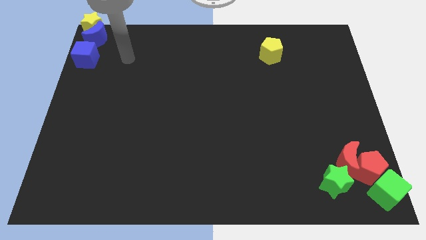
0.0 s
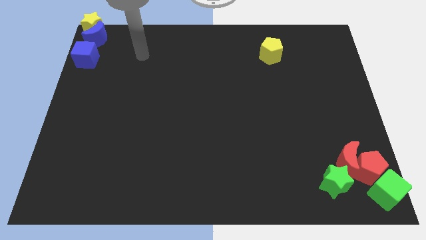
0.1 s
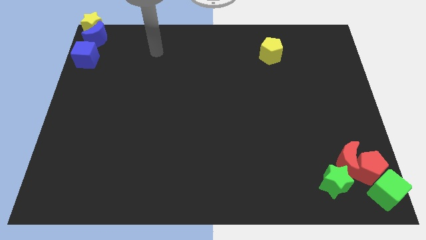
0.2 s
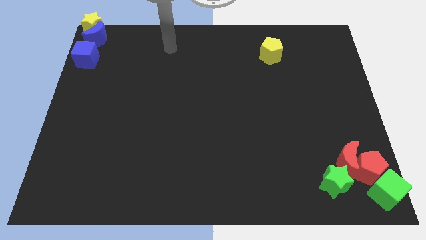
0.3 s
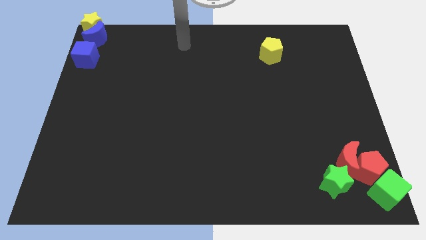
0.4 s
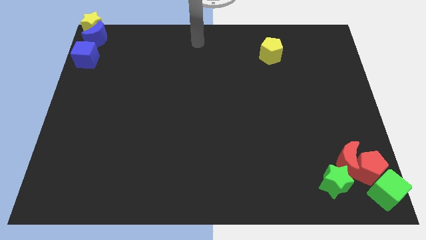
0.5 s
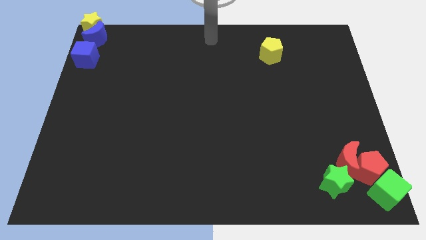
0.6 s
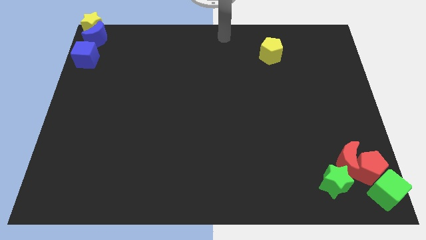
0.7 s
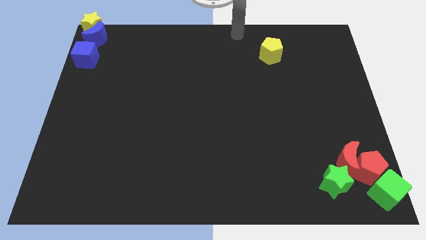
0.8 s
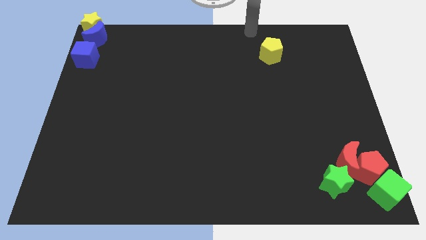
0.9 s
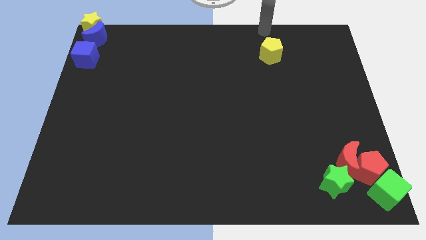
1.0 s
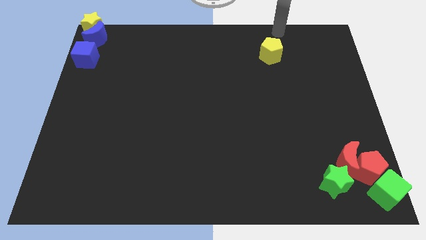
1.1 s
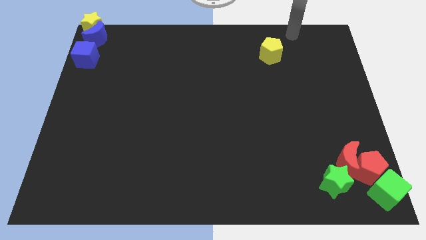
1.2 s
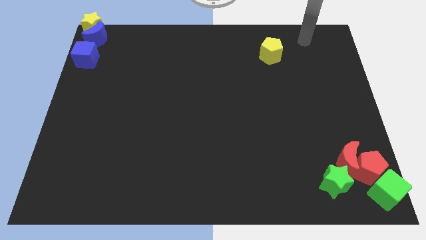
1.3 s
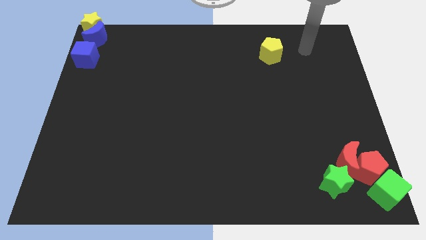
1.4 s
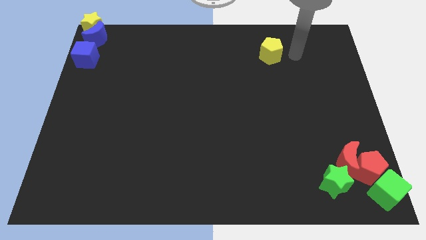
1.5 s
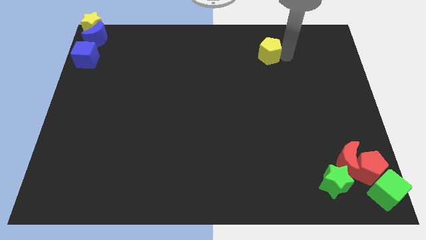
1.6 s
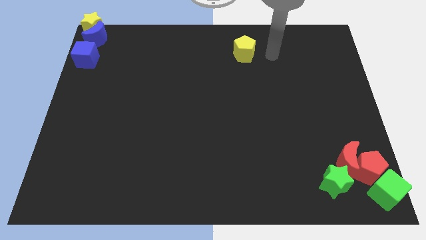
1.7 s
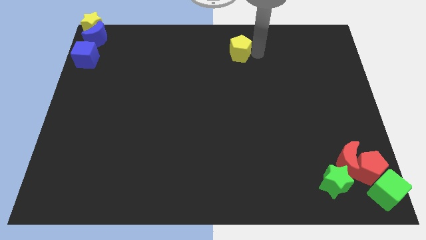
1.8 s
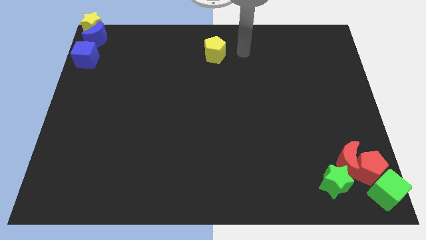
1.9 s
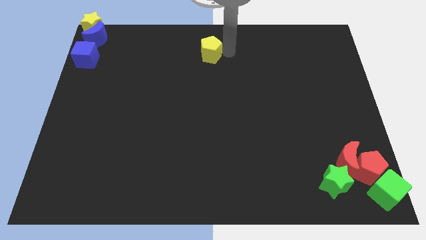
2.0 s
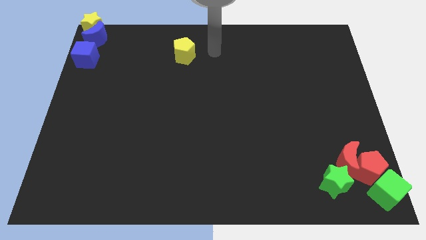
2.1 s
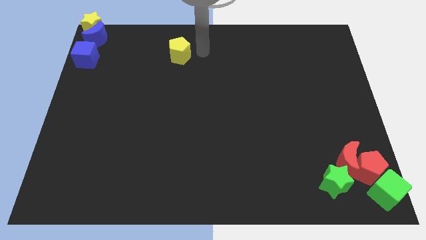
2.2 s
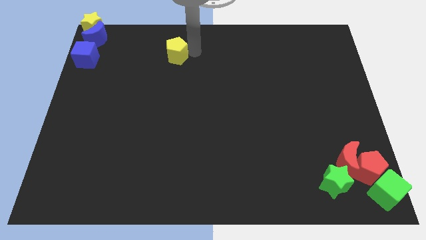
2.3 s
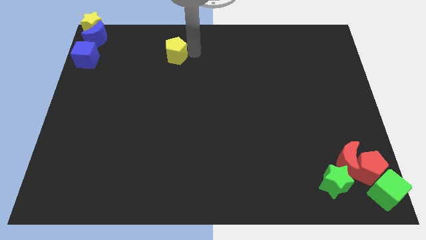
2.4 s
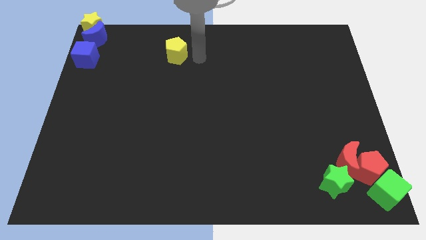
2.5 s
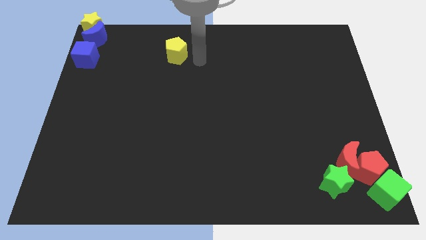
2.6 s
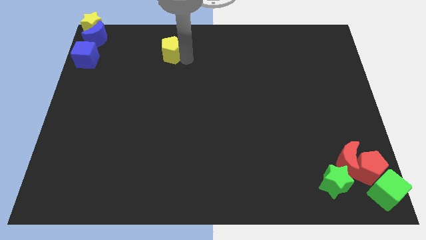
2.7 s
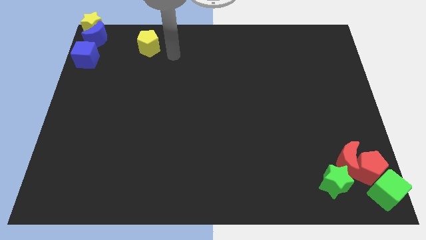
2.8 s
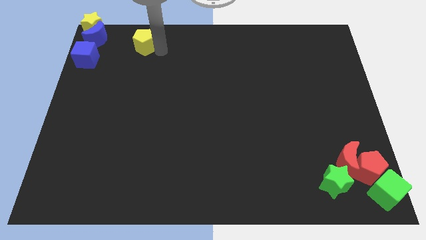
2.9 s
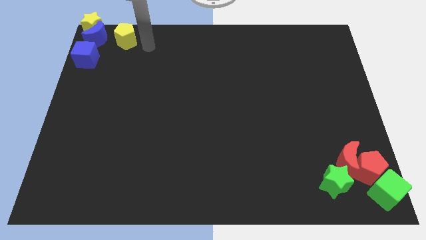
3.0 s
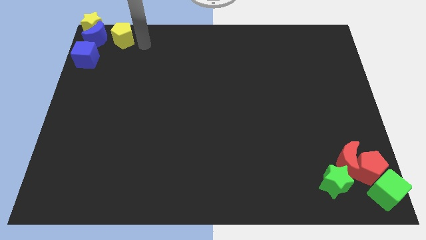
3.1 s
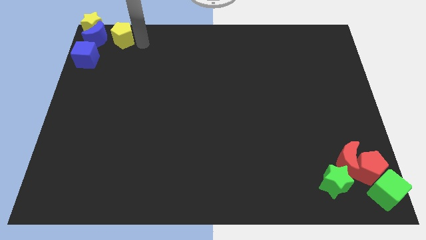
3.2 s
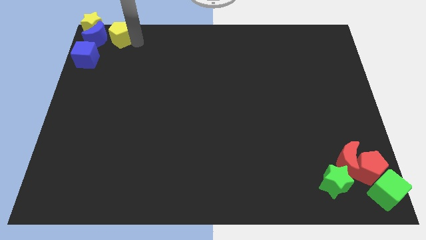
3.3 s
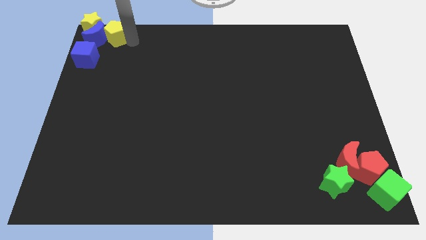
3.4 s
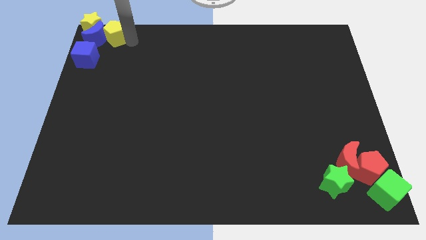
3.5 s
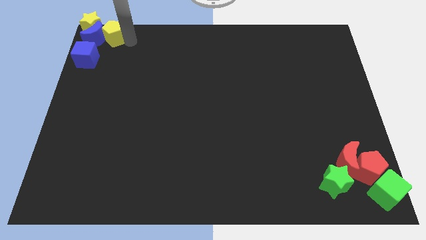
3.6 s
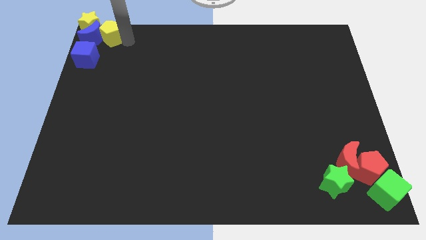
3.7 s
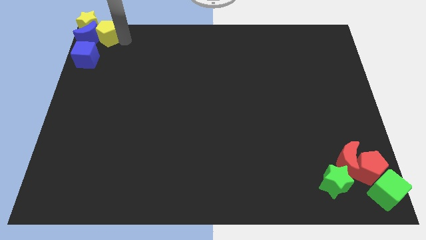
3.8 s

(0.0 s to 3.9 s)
move the yellow pentagon to the right side of the blue crescent

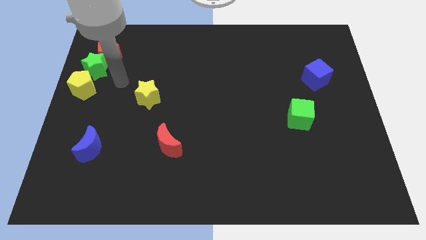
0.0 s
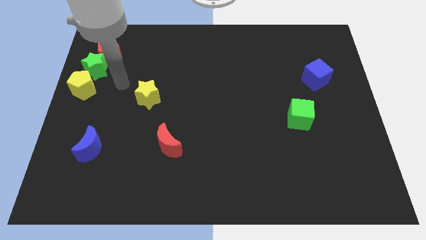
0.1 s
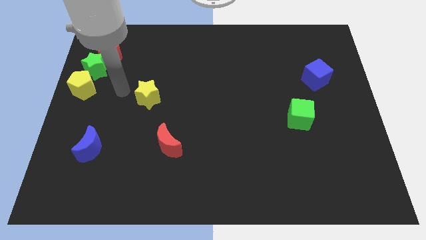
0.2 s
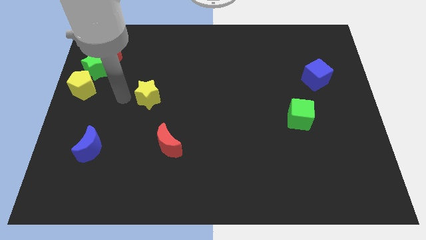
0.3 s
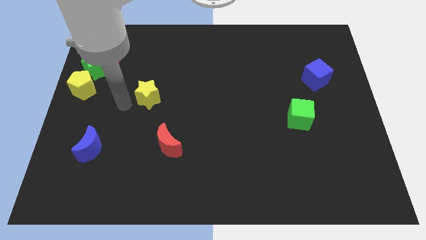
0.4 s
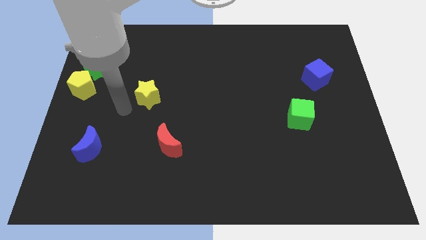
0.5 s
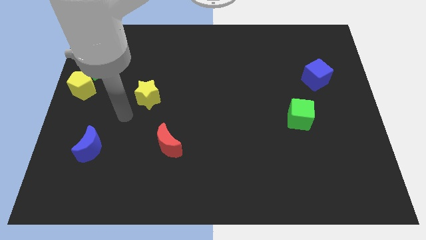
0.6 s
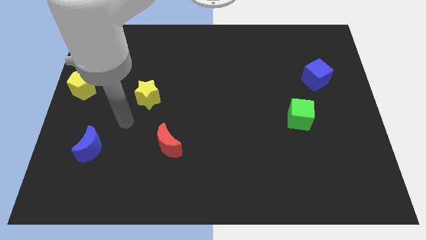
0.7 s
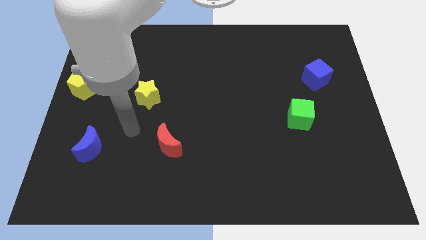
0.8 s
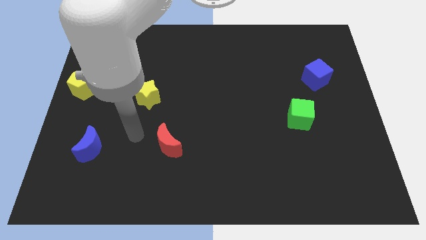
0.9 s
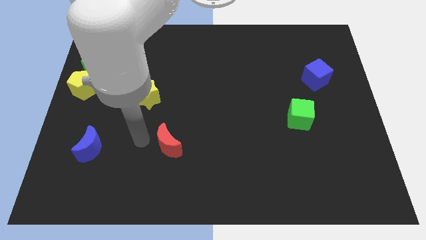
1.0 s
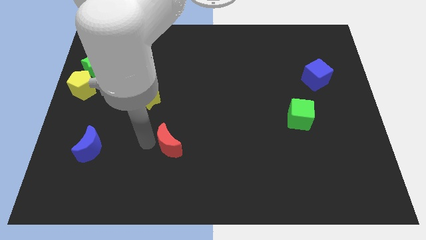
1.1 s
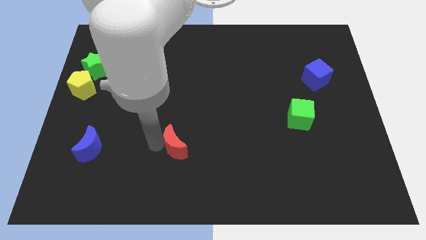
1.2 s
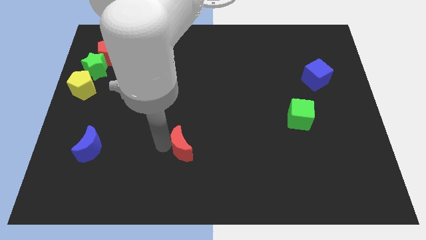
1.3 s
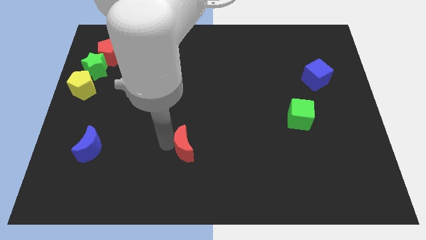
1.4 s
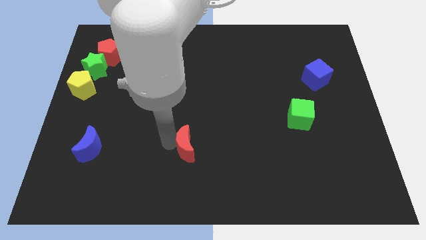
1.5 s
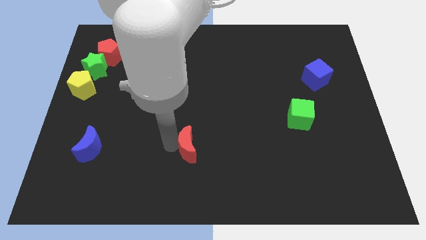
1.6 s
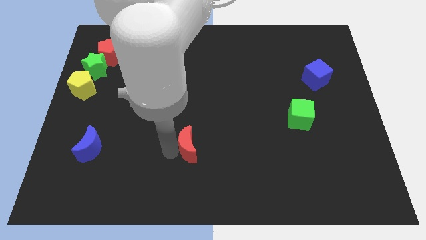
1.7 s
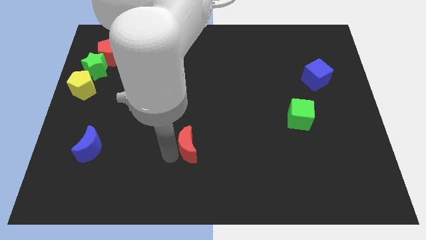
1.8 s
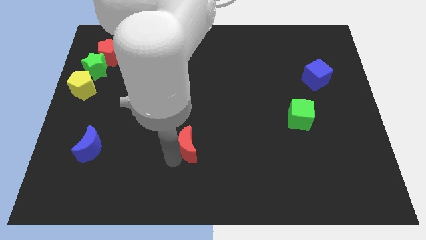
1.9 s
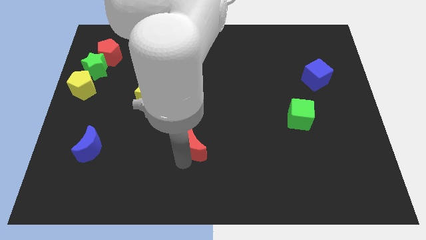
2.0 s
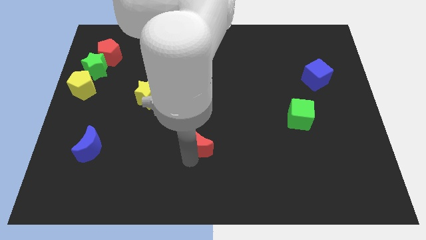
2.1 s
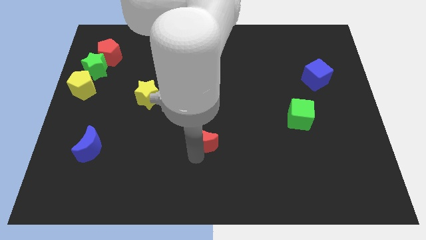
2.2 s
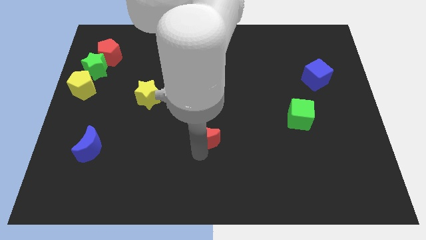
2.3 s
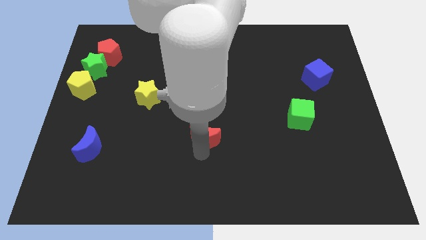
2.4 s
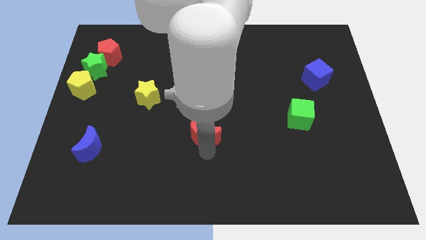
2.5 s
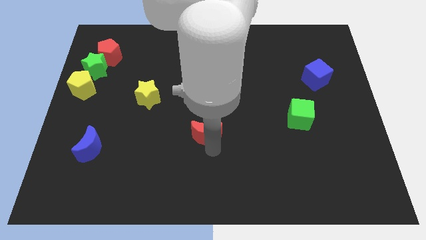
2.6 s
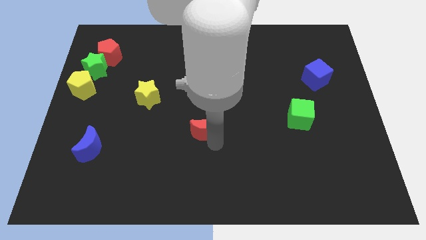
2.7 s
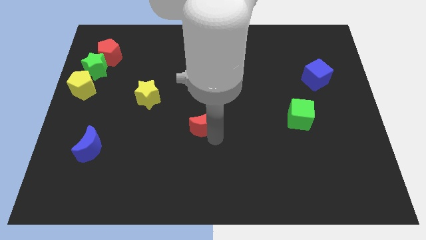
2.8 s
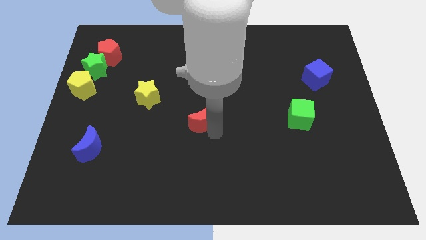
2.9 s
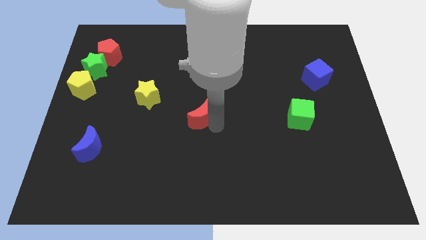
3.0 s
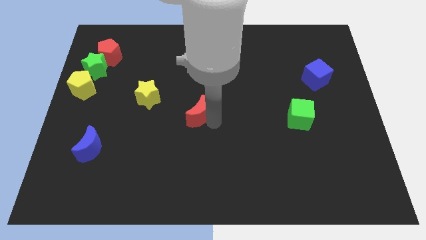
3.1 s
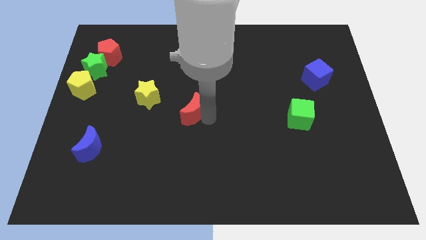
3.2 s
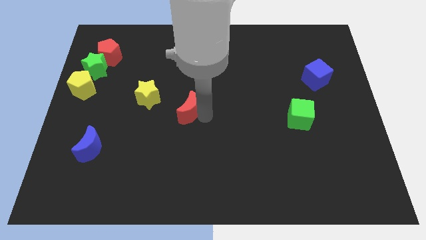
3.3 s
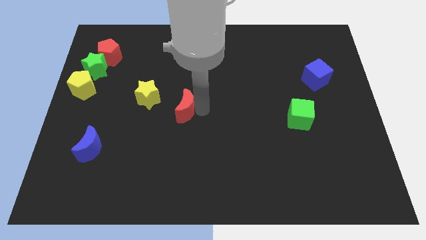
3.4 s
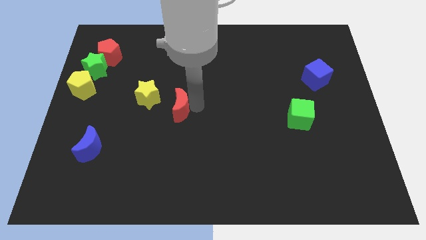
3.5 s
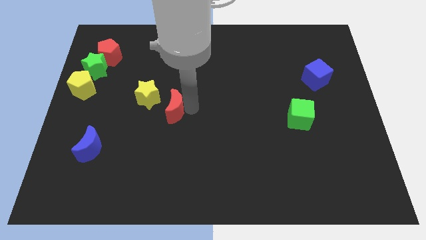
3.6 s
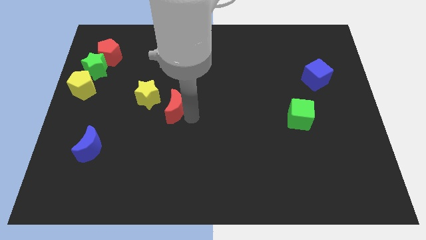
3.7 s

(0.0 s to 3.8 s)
push the red crescent towards the yellow star

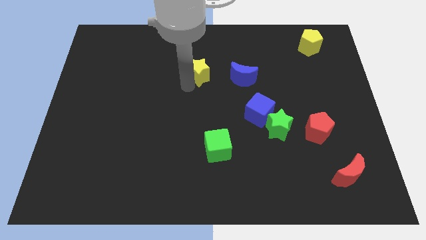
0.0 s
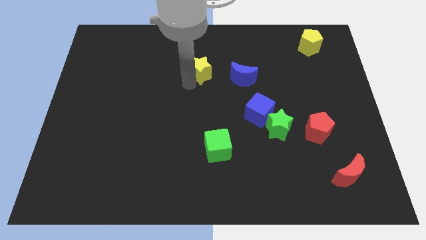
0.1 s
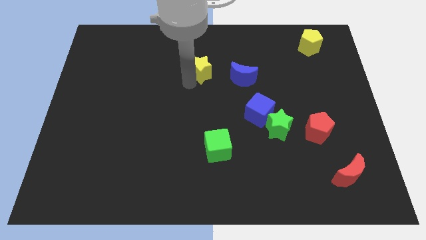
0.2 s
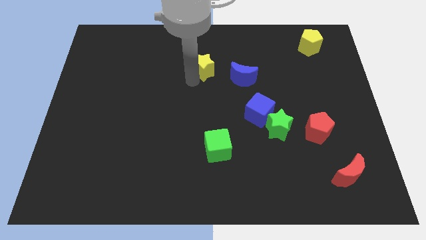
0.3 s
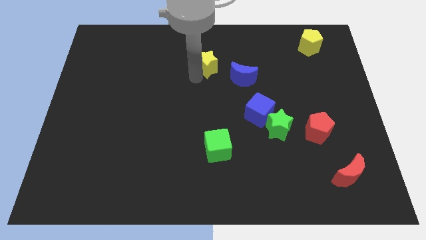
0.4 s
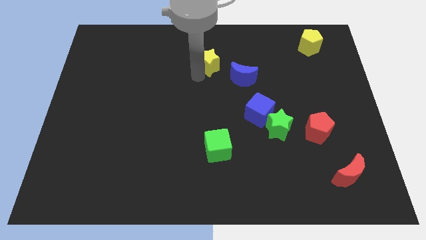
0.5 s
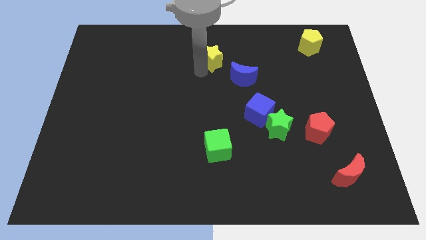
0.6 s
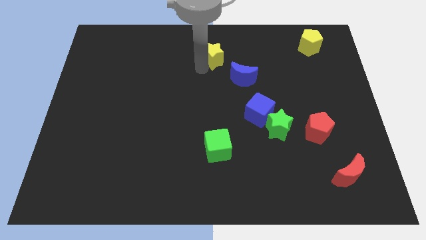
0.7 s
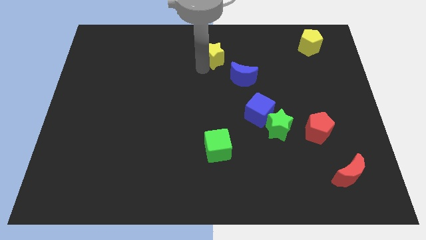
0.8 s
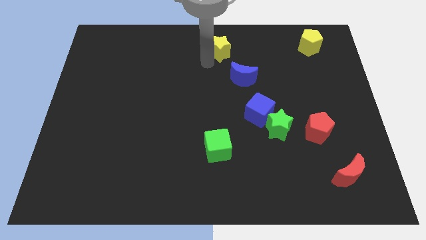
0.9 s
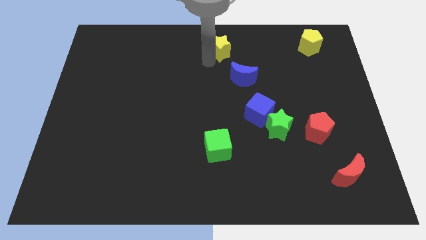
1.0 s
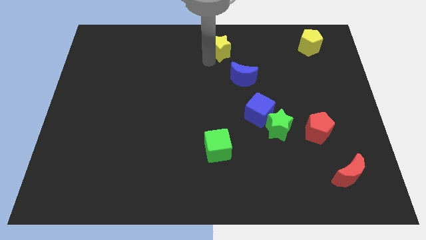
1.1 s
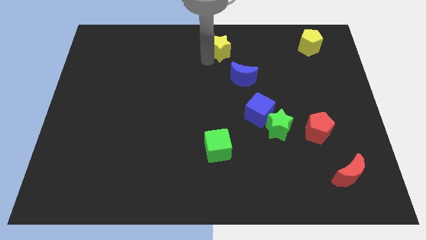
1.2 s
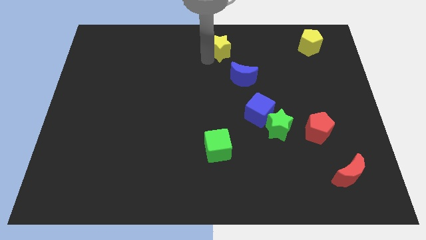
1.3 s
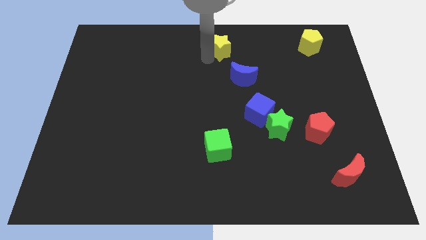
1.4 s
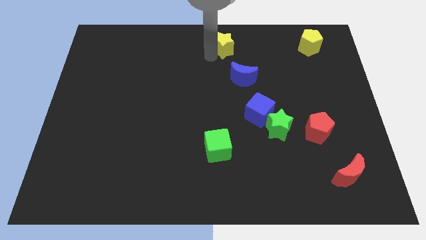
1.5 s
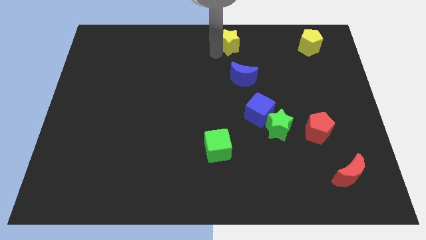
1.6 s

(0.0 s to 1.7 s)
move the yellow star to the top center
